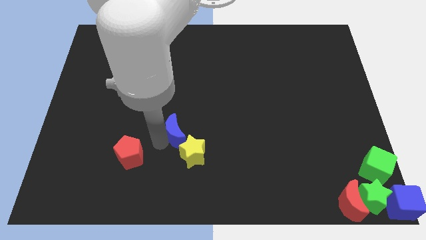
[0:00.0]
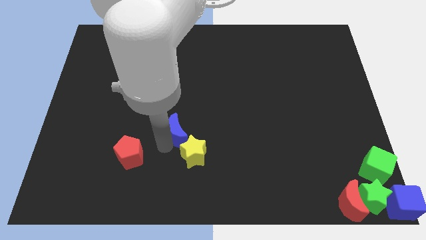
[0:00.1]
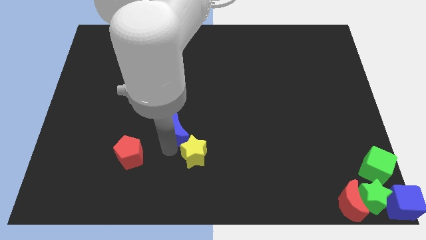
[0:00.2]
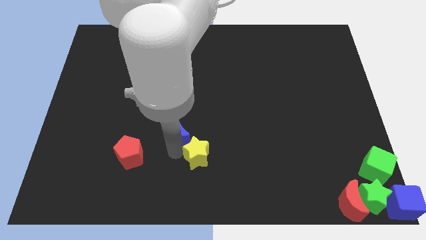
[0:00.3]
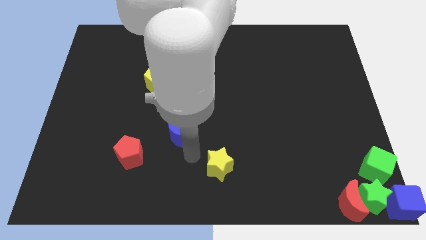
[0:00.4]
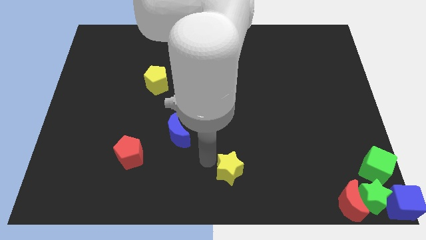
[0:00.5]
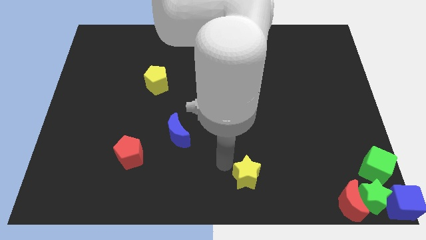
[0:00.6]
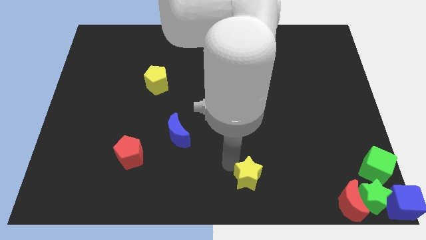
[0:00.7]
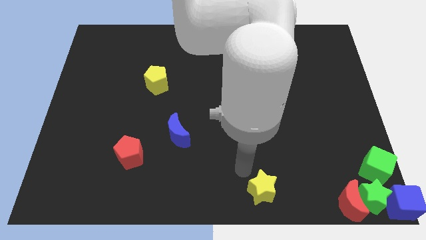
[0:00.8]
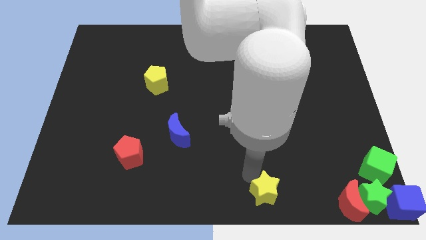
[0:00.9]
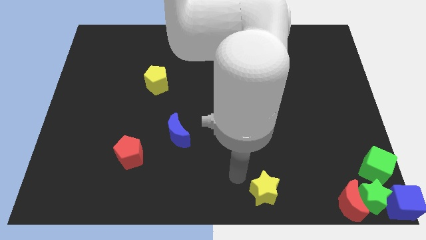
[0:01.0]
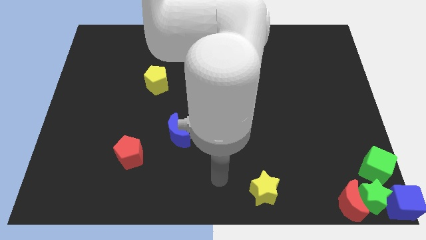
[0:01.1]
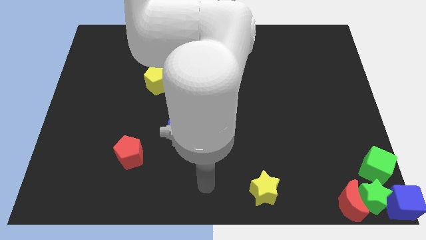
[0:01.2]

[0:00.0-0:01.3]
separate the yellow star from the blue moon

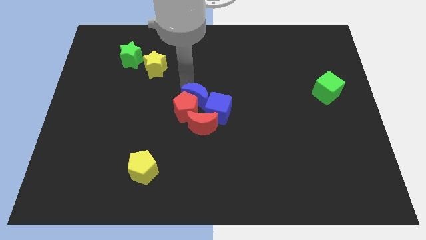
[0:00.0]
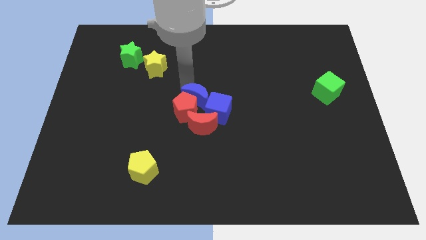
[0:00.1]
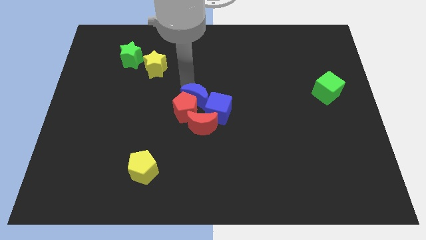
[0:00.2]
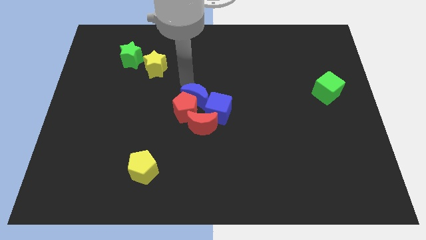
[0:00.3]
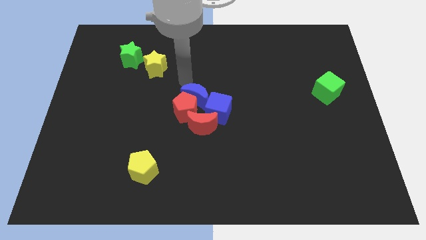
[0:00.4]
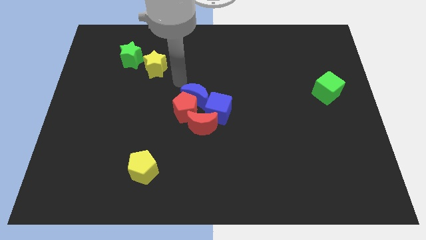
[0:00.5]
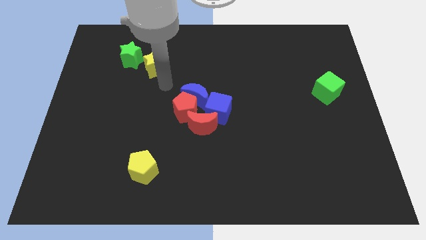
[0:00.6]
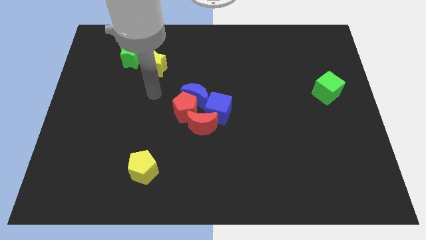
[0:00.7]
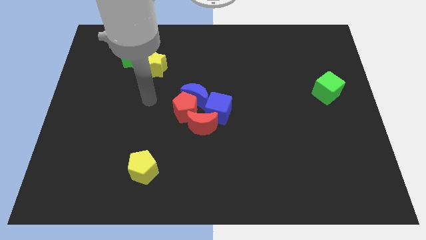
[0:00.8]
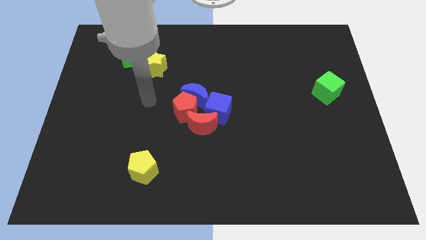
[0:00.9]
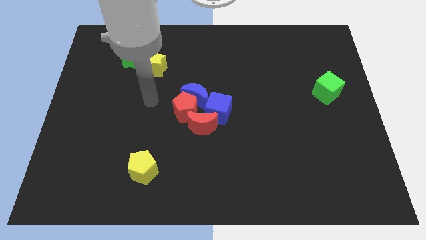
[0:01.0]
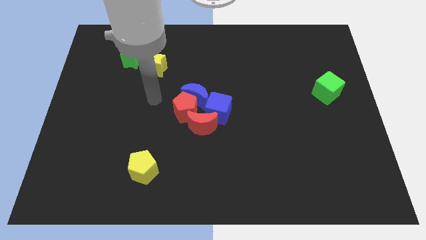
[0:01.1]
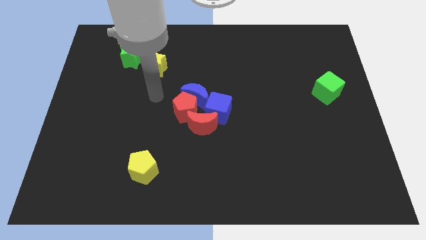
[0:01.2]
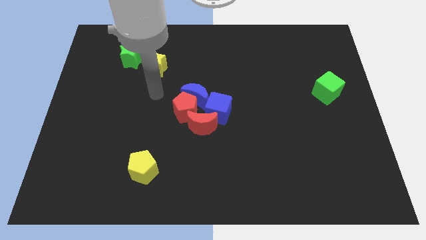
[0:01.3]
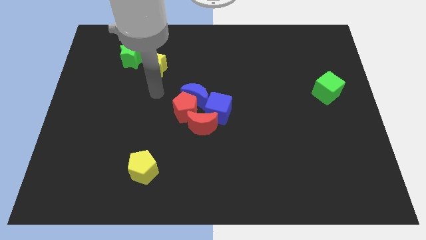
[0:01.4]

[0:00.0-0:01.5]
place your arm to the bottom side of the yellow star

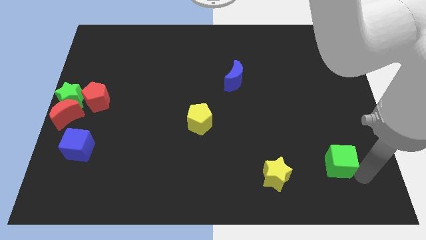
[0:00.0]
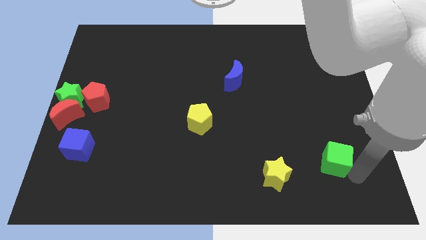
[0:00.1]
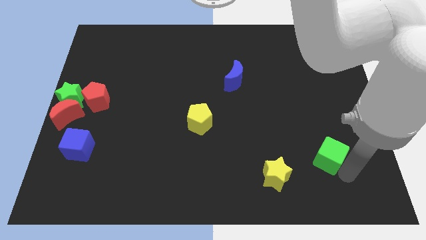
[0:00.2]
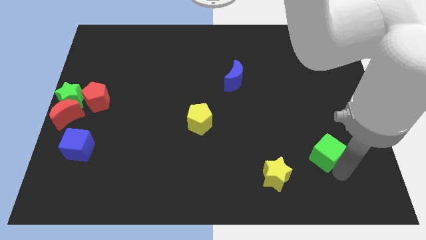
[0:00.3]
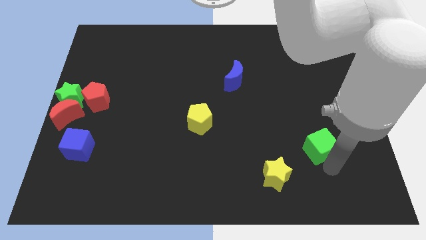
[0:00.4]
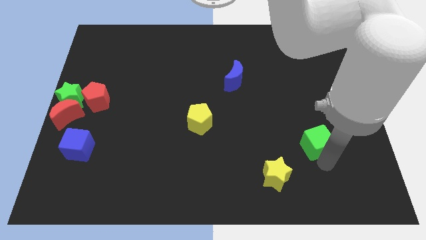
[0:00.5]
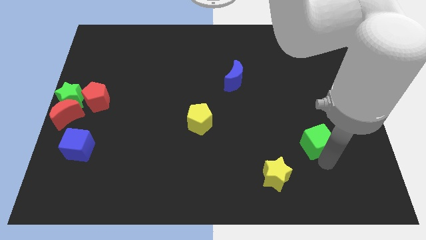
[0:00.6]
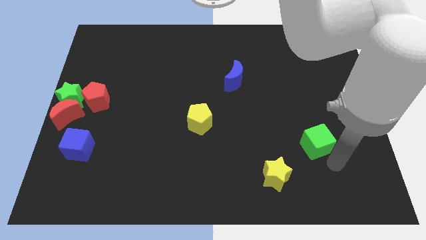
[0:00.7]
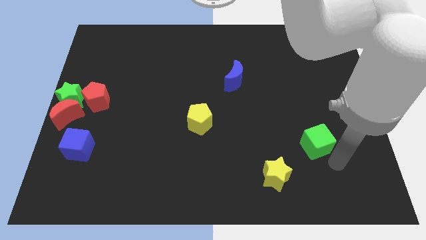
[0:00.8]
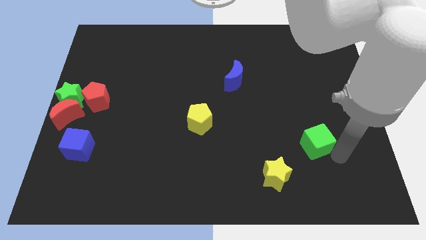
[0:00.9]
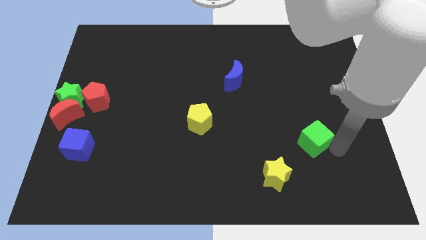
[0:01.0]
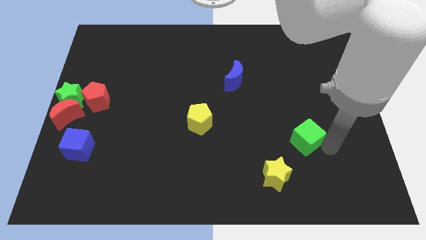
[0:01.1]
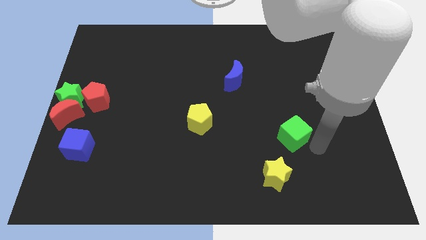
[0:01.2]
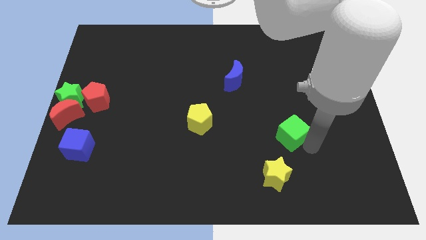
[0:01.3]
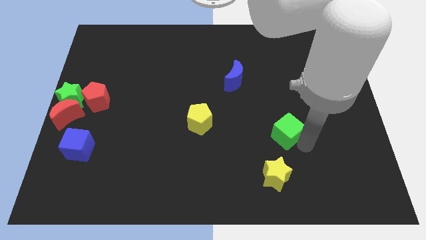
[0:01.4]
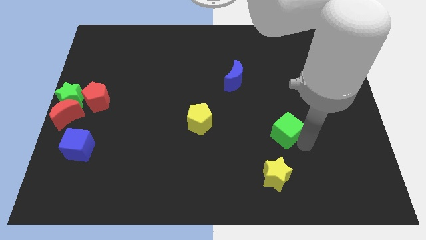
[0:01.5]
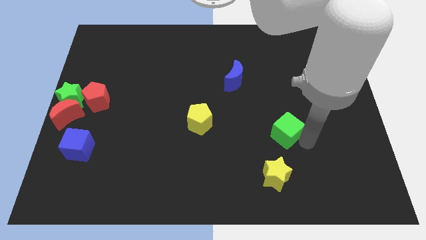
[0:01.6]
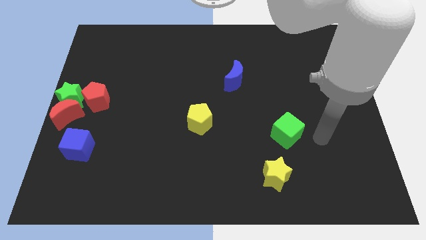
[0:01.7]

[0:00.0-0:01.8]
move the green cube above yellow star

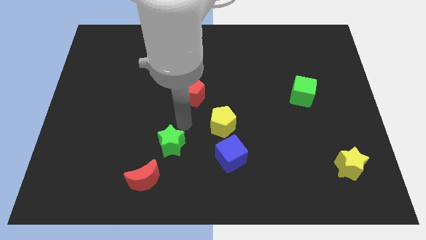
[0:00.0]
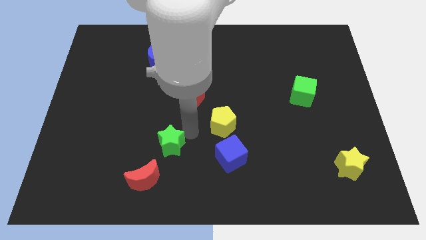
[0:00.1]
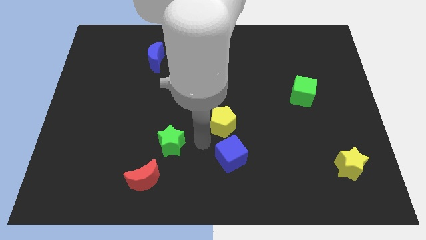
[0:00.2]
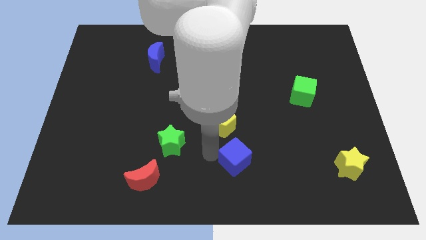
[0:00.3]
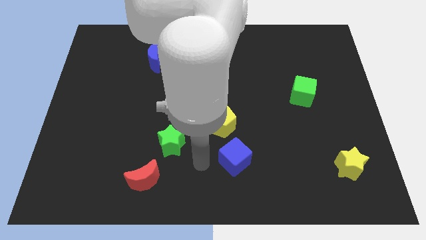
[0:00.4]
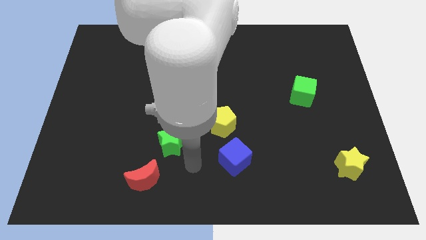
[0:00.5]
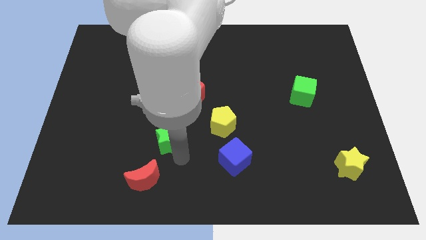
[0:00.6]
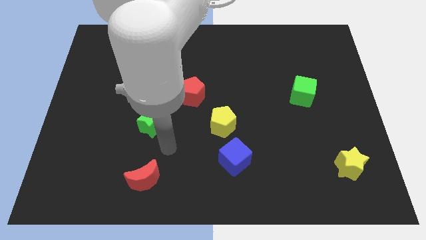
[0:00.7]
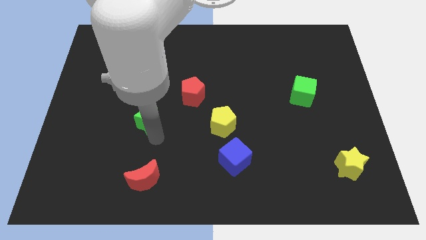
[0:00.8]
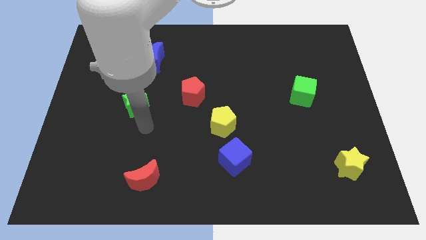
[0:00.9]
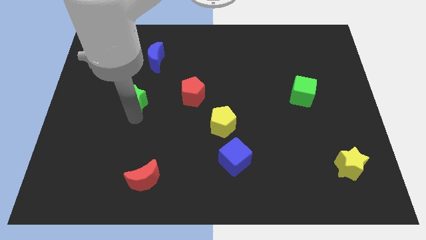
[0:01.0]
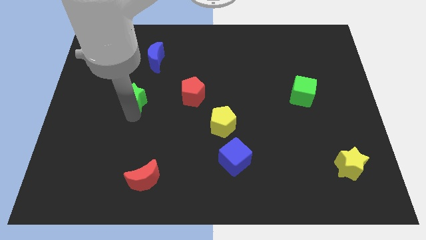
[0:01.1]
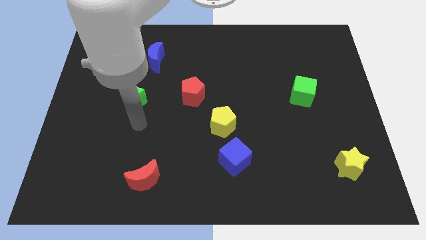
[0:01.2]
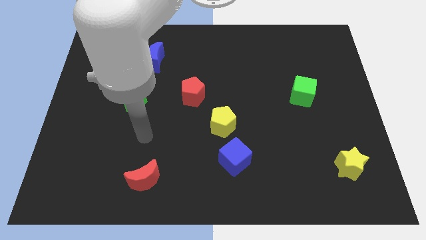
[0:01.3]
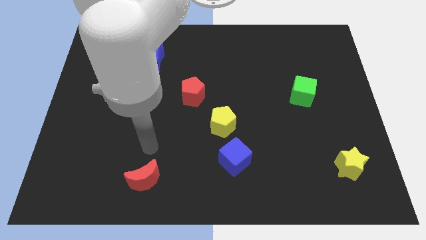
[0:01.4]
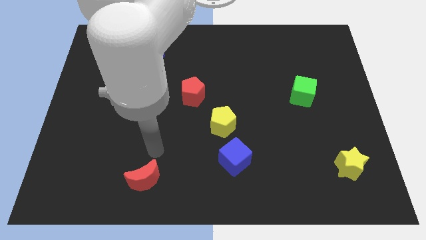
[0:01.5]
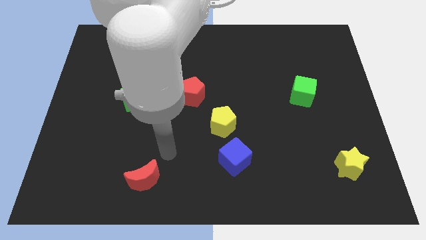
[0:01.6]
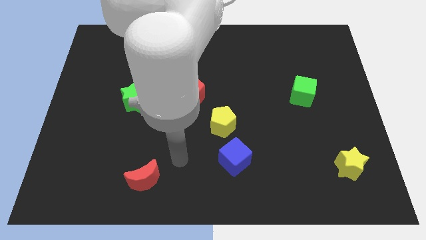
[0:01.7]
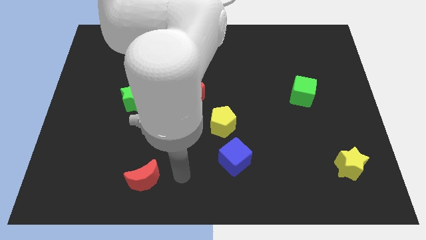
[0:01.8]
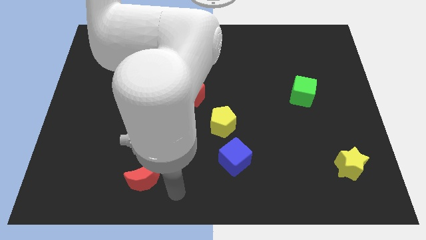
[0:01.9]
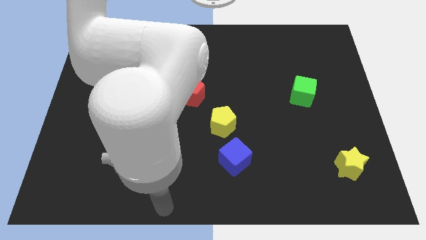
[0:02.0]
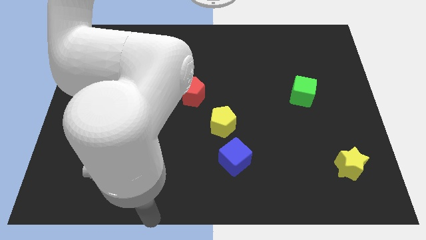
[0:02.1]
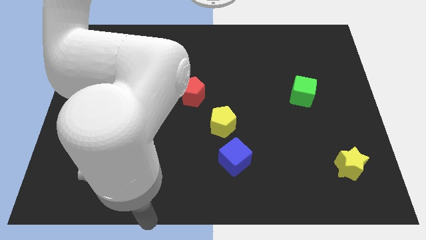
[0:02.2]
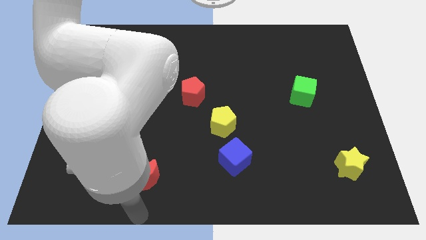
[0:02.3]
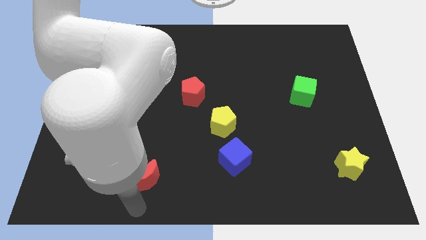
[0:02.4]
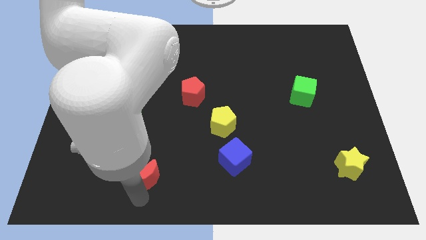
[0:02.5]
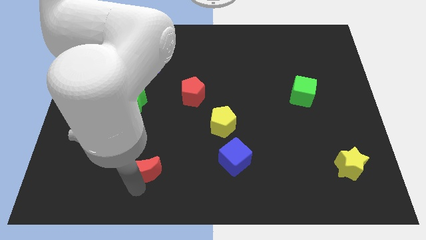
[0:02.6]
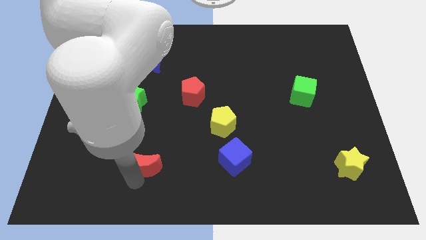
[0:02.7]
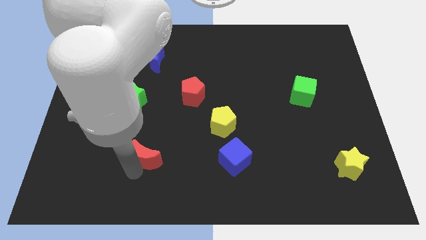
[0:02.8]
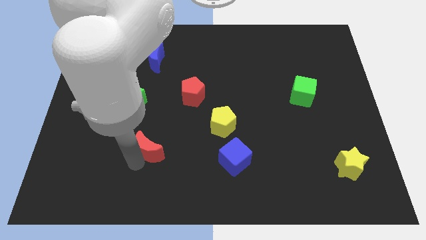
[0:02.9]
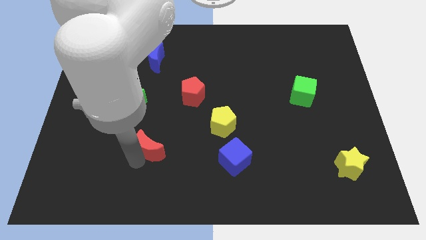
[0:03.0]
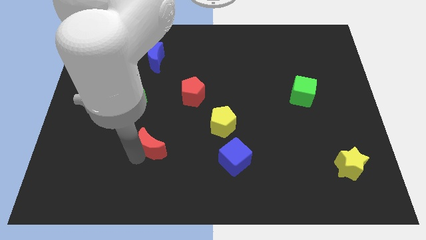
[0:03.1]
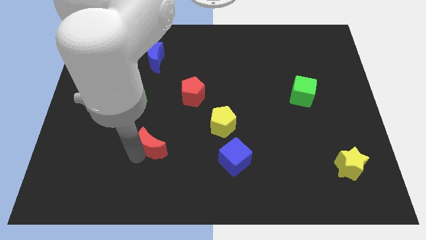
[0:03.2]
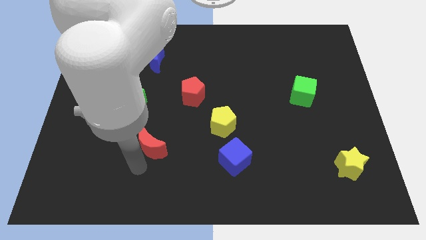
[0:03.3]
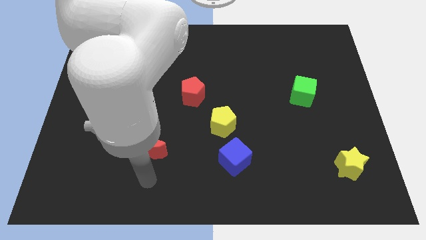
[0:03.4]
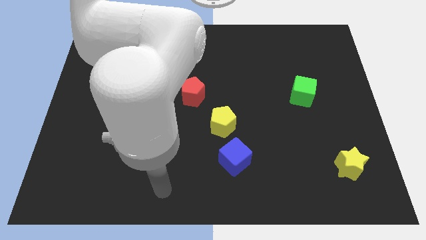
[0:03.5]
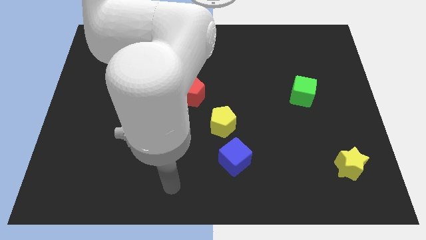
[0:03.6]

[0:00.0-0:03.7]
move green star and the red crescent to the top of the board

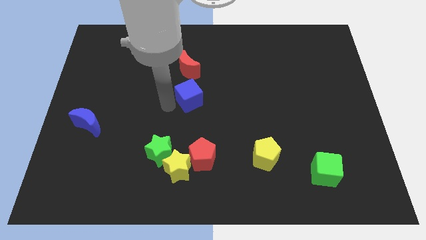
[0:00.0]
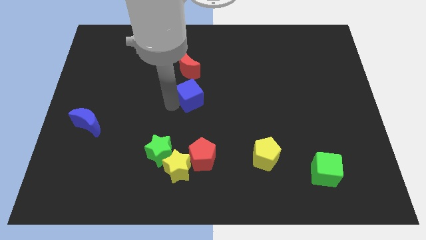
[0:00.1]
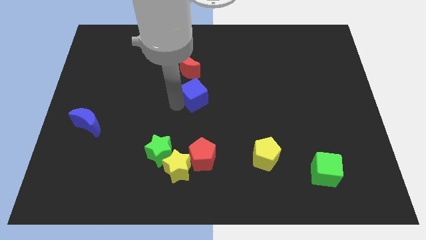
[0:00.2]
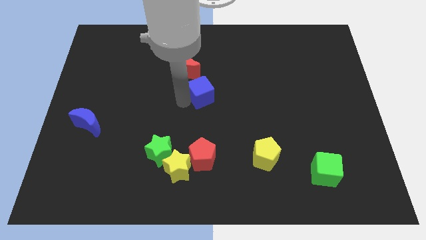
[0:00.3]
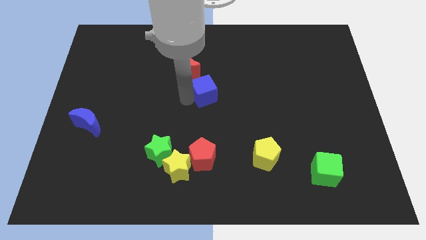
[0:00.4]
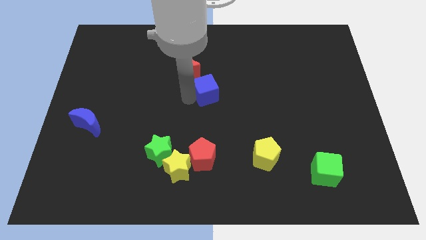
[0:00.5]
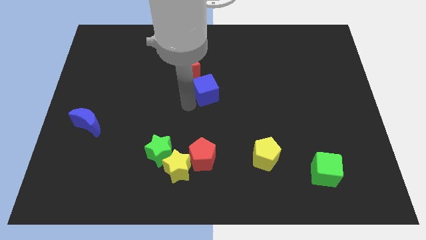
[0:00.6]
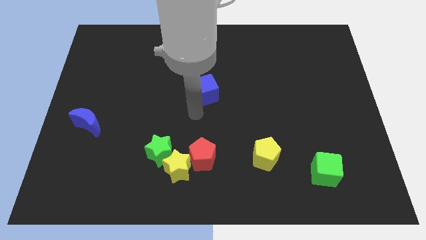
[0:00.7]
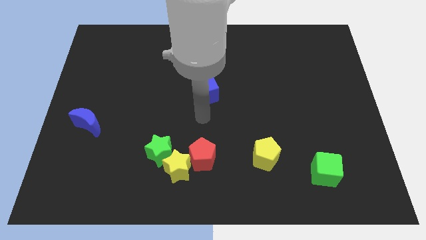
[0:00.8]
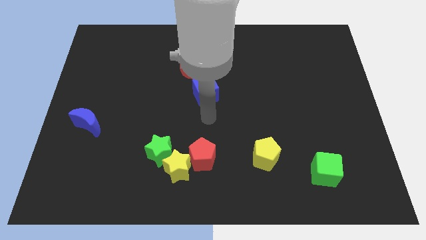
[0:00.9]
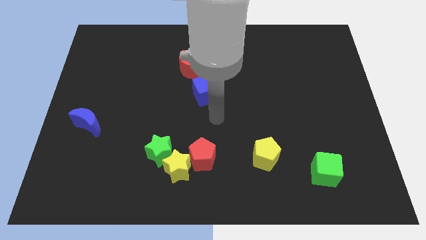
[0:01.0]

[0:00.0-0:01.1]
move blue cube slightly right
